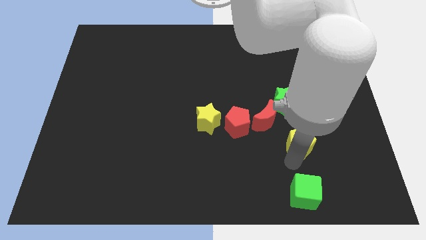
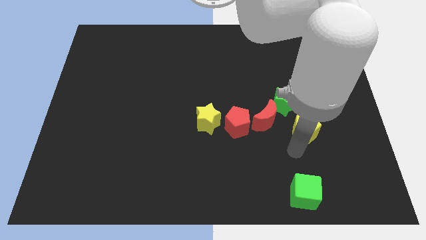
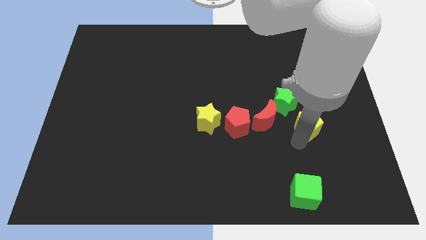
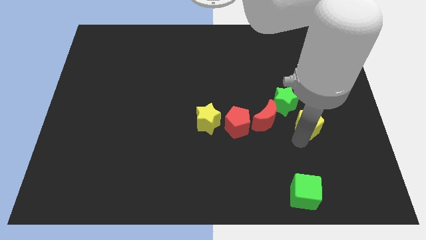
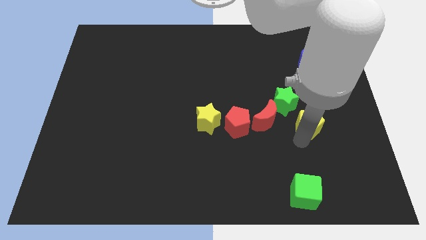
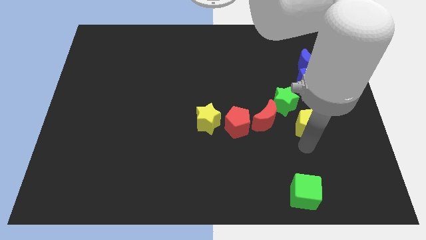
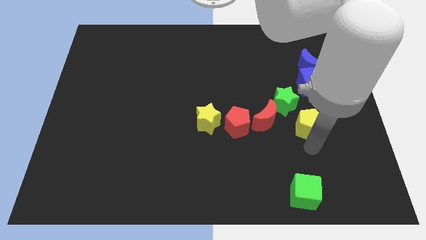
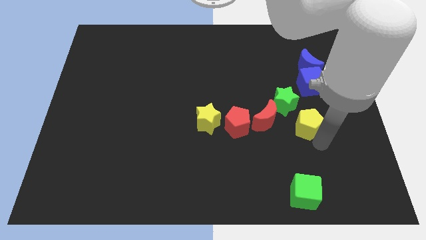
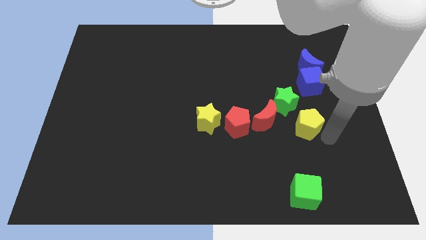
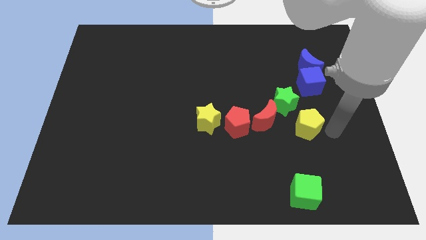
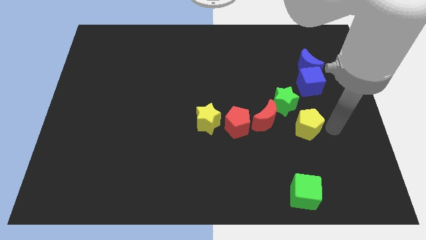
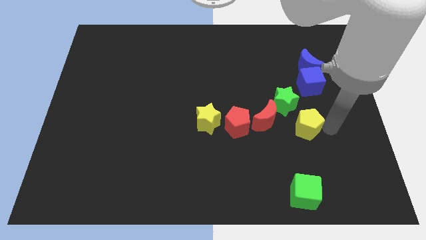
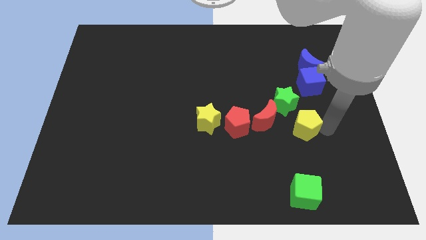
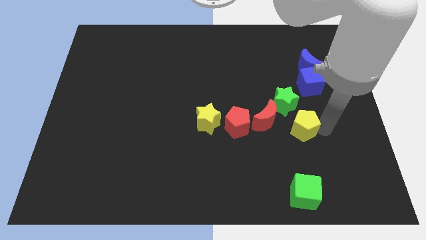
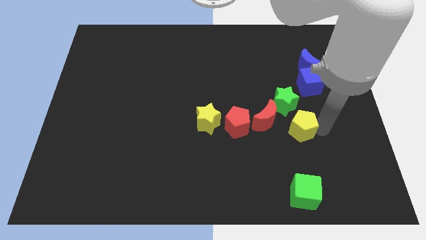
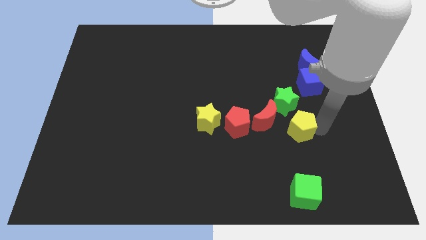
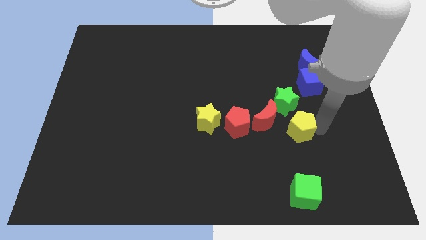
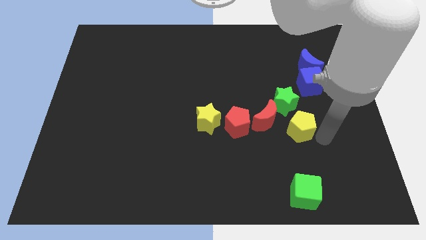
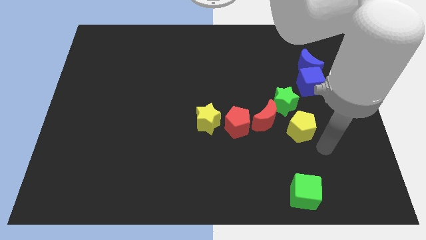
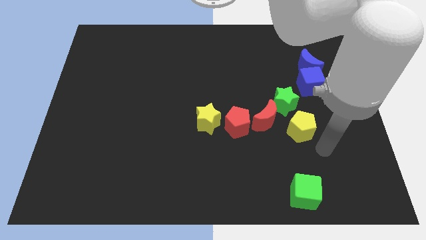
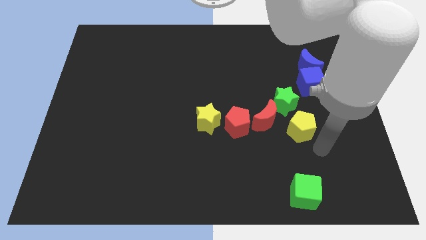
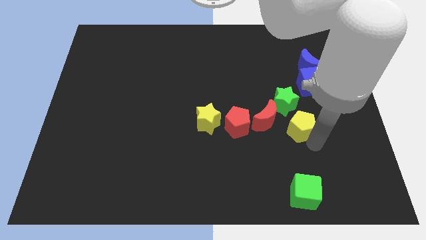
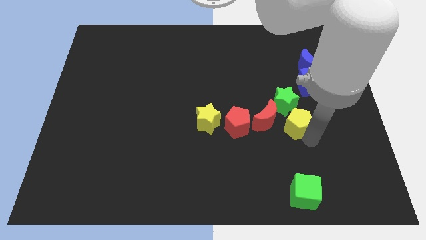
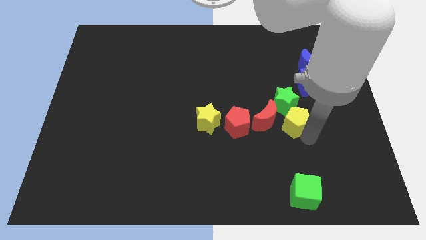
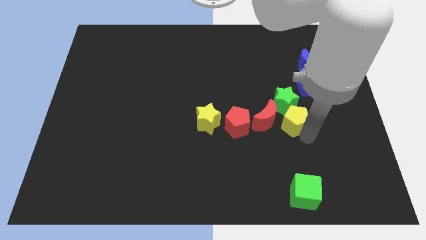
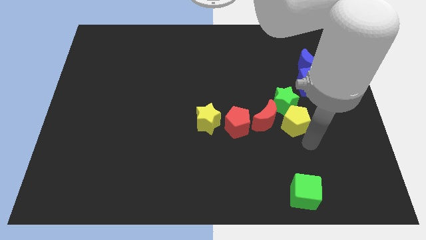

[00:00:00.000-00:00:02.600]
push yellow pentagon towards green star

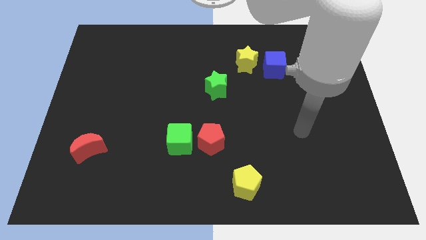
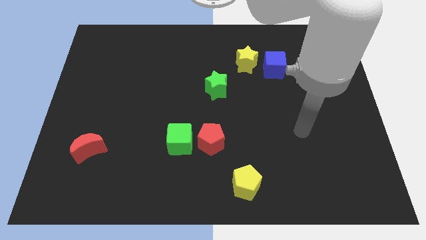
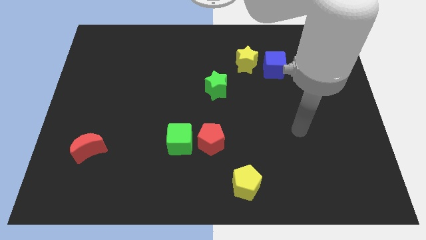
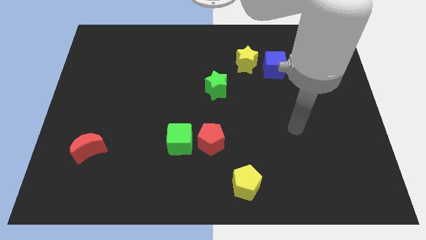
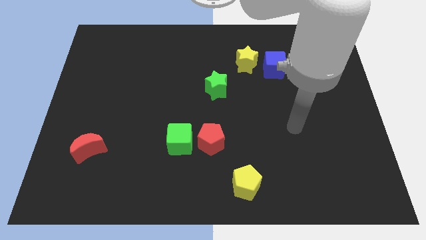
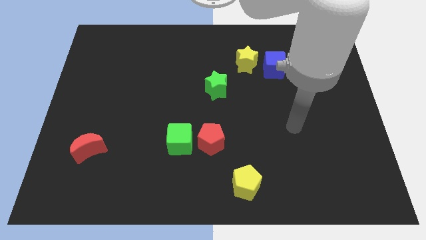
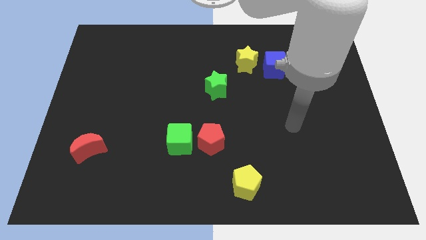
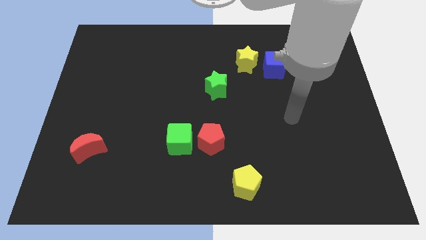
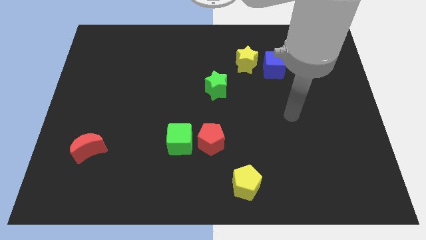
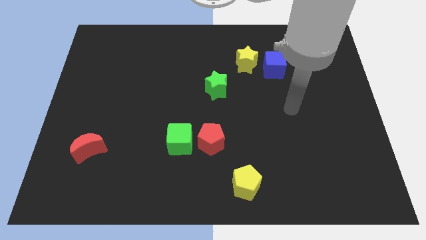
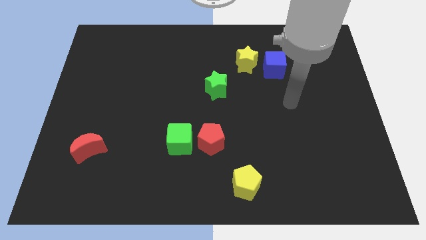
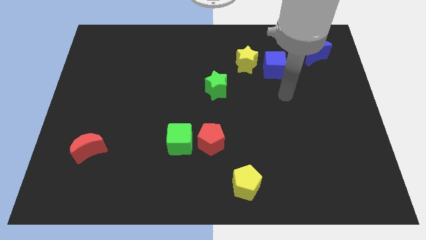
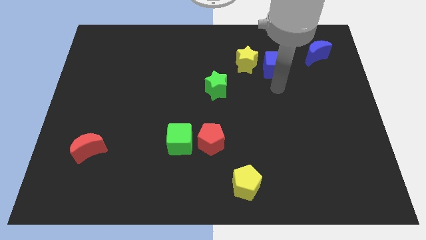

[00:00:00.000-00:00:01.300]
point your arm at the bottom of blue cube

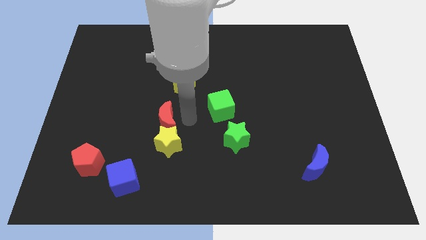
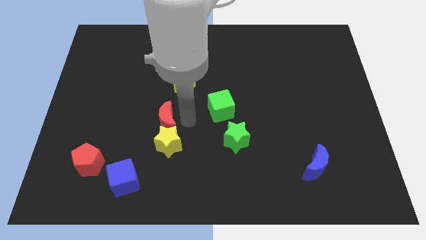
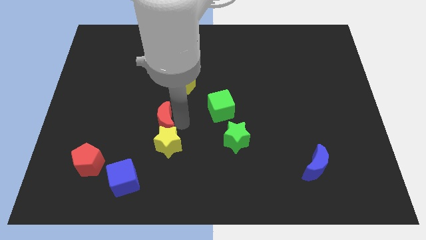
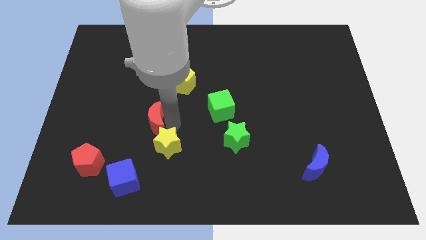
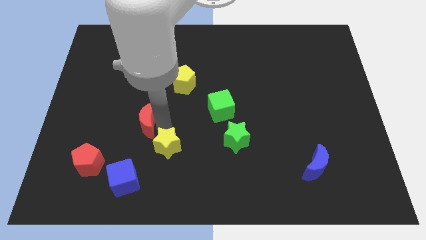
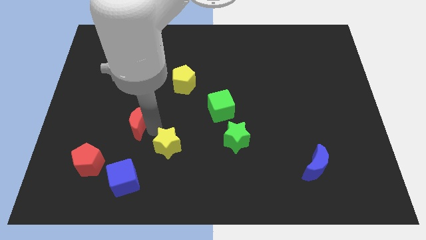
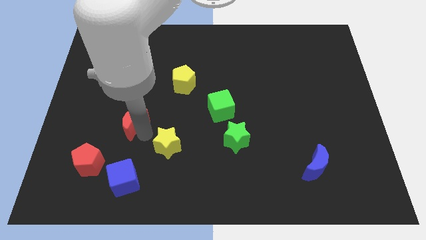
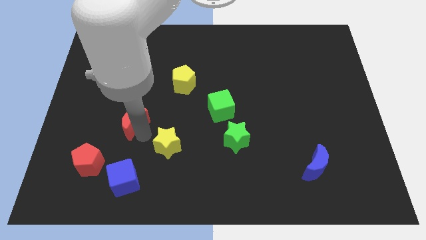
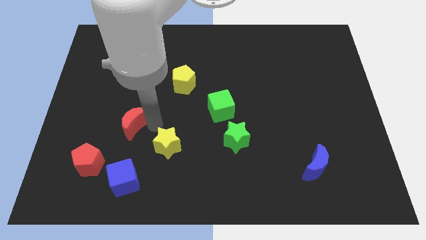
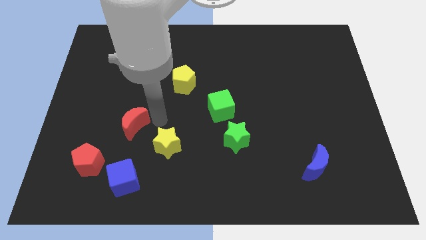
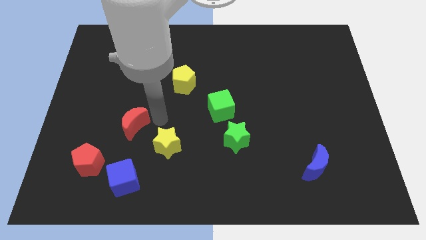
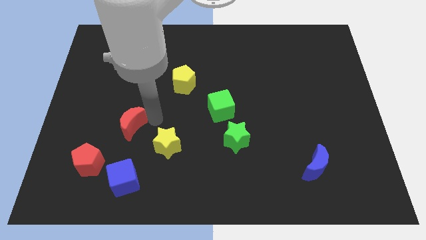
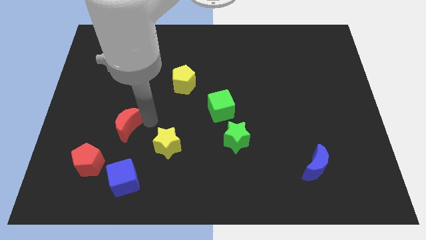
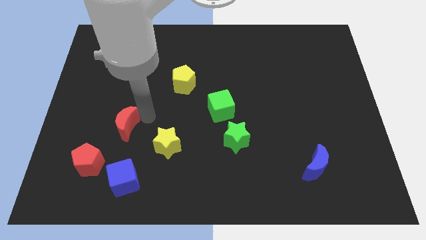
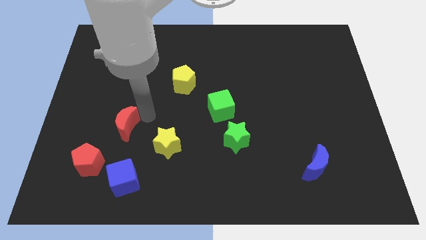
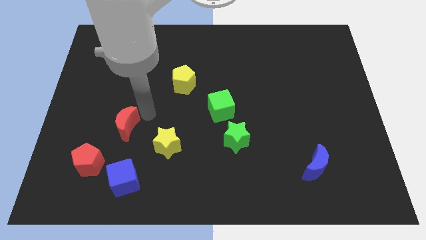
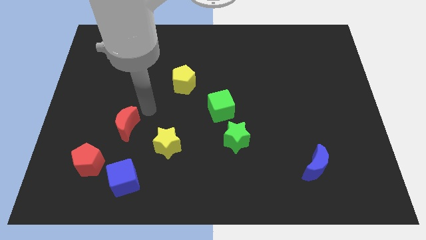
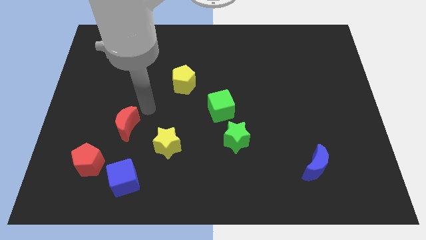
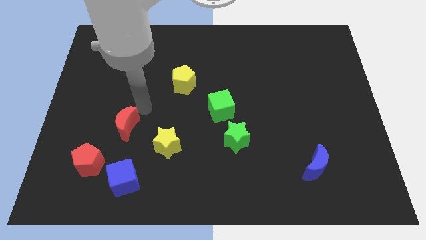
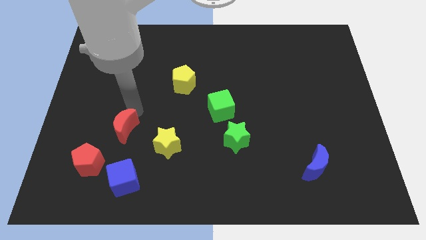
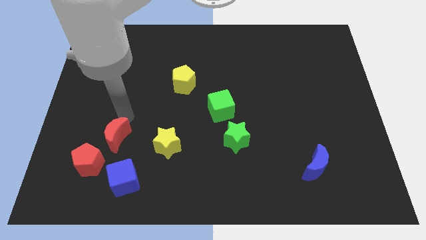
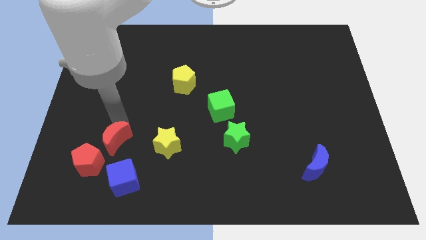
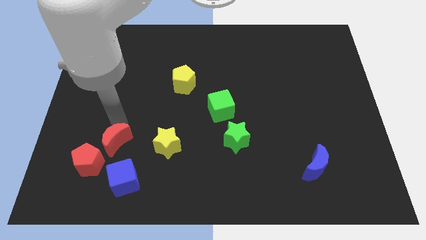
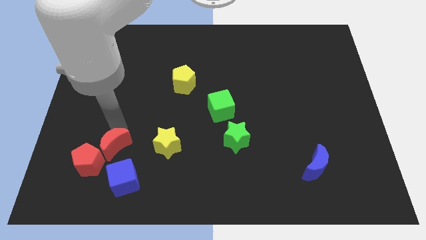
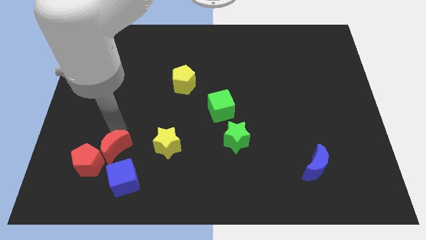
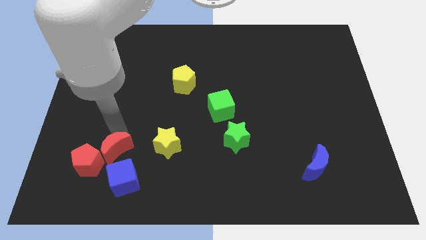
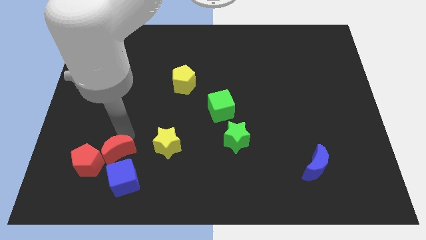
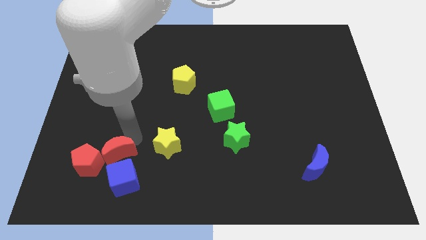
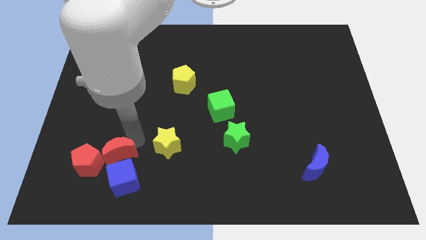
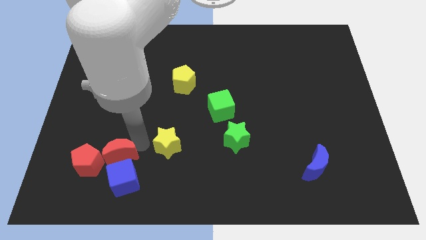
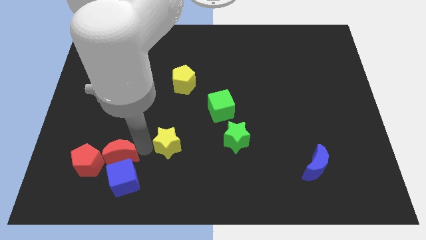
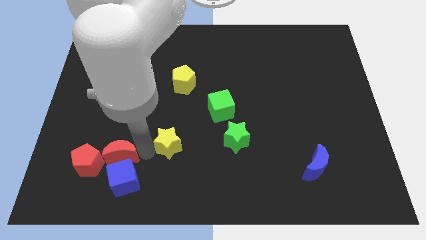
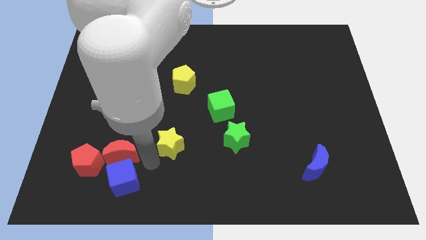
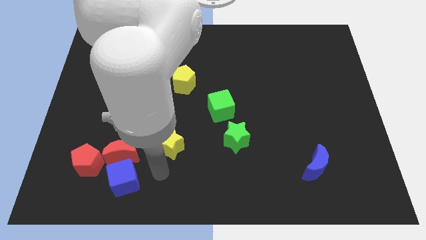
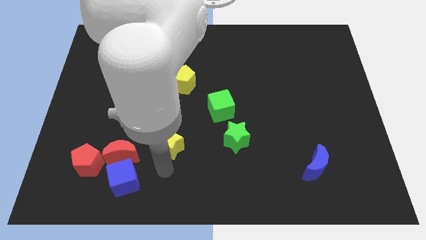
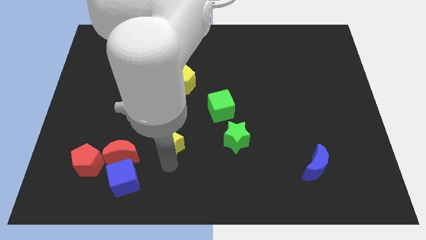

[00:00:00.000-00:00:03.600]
place the yellow star left to the green star

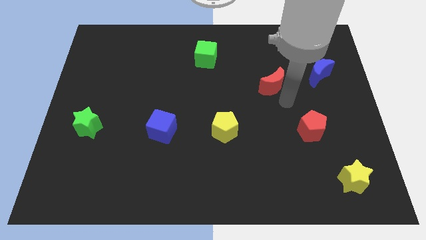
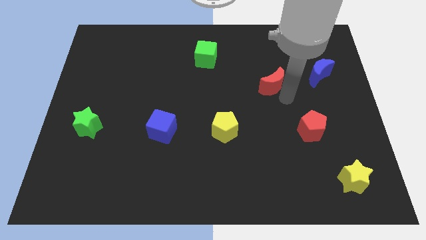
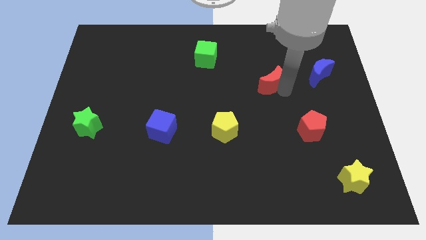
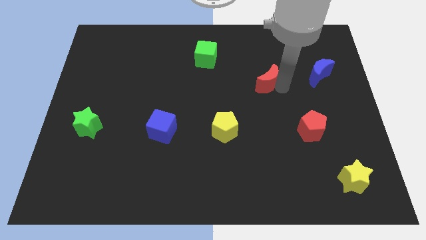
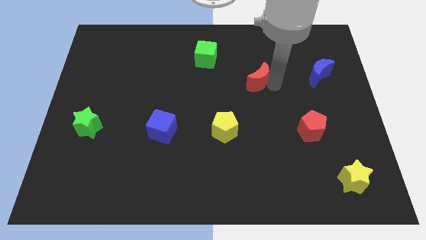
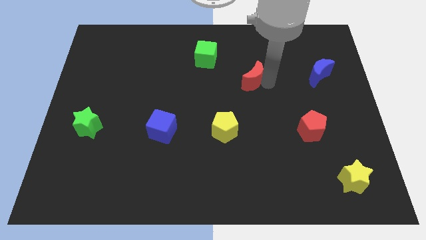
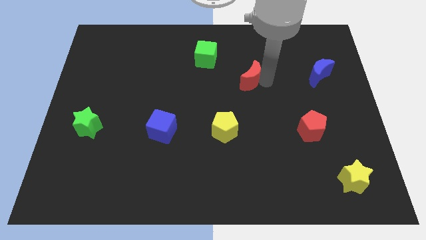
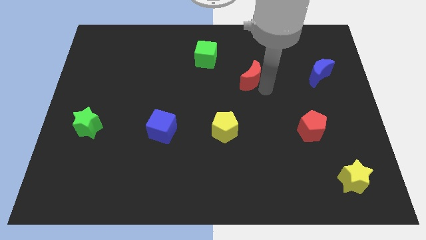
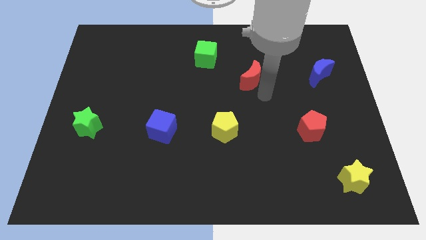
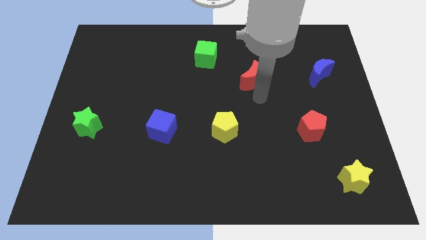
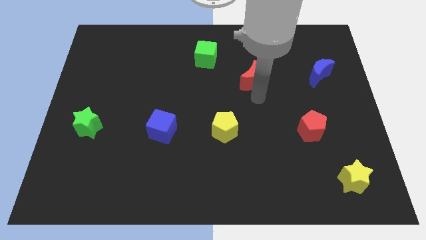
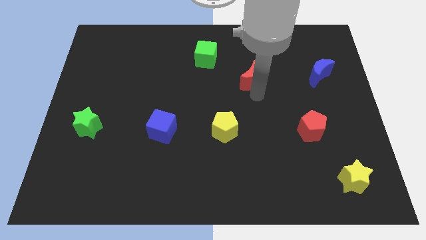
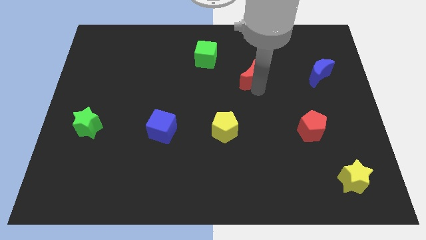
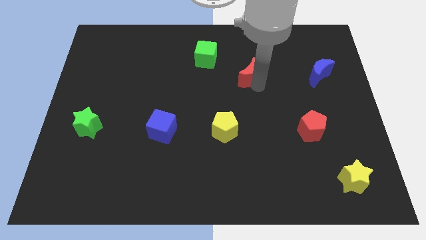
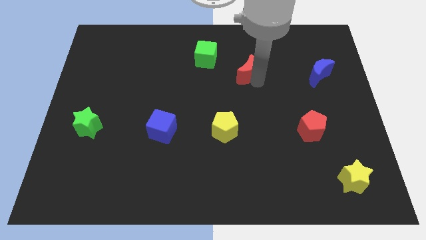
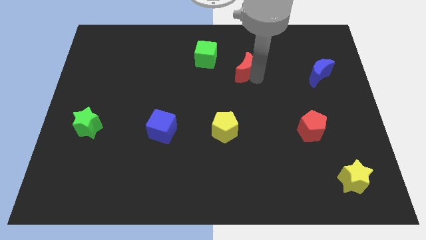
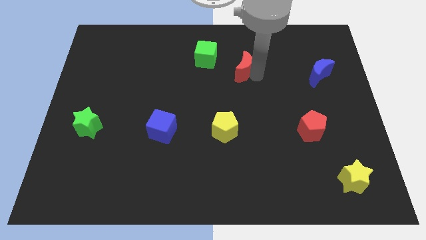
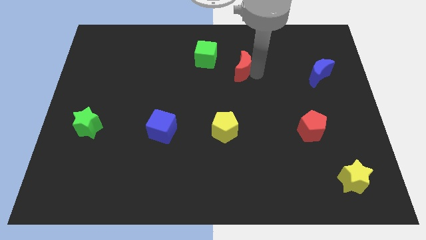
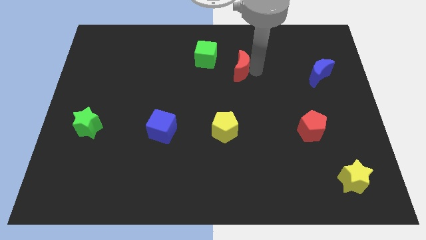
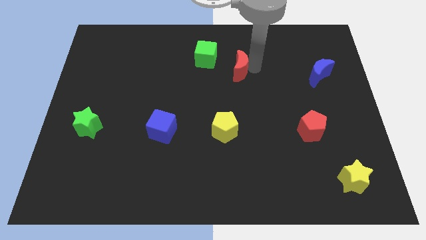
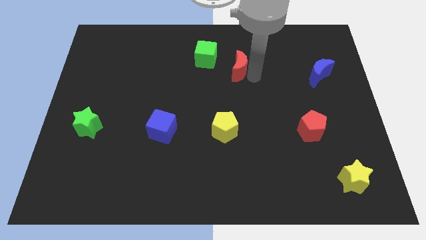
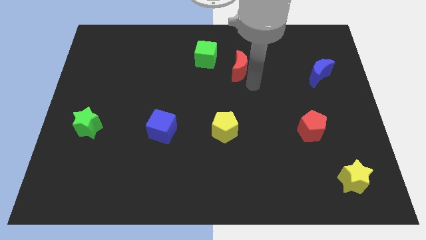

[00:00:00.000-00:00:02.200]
move the red crescent towards the green cube
